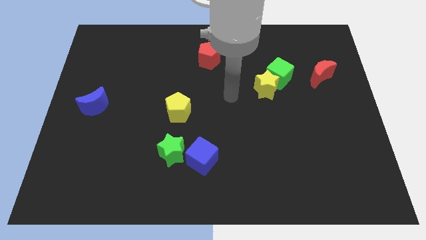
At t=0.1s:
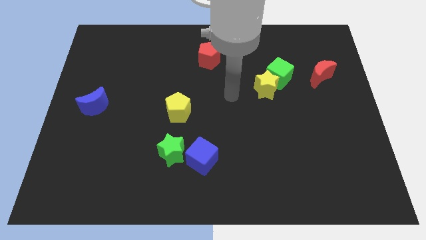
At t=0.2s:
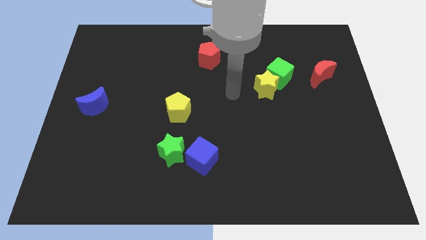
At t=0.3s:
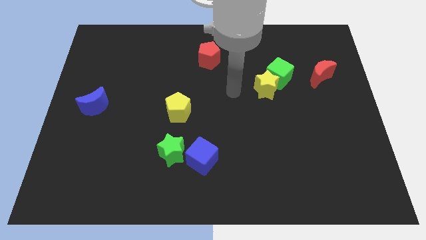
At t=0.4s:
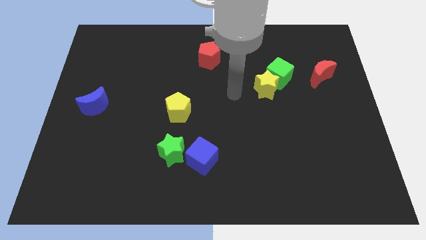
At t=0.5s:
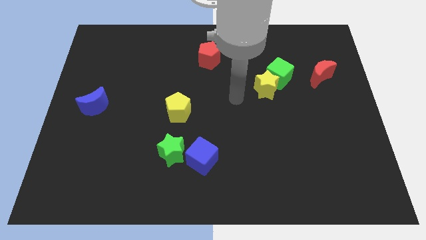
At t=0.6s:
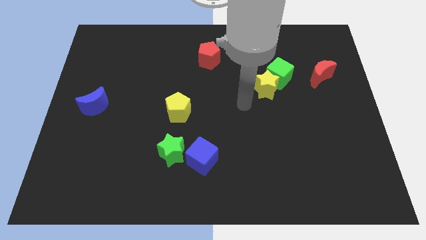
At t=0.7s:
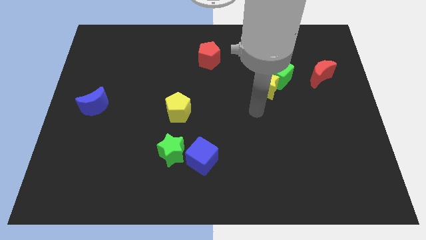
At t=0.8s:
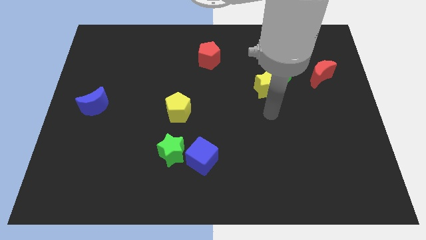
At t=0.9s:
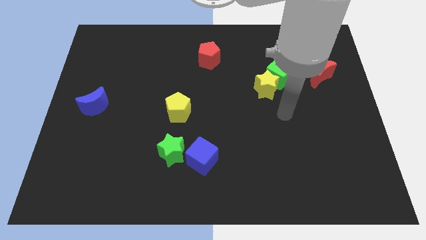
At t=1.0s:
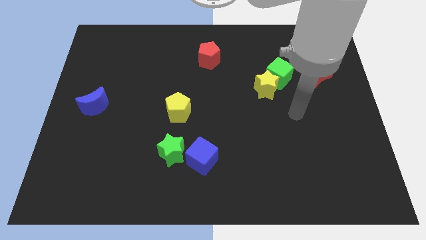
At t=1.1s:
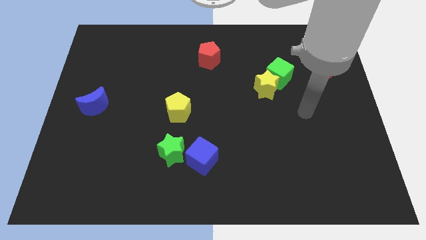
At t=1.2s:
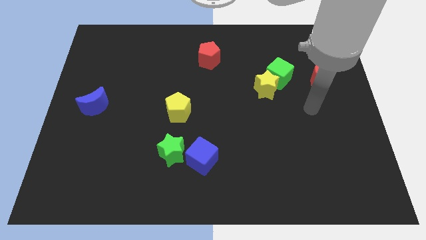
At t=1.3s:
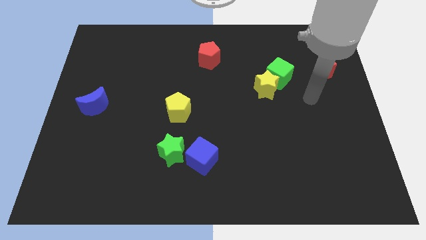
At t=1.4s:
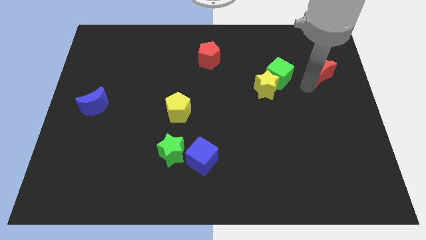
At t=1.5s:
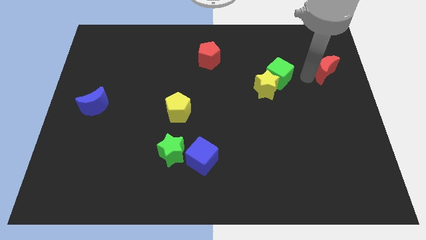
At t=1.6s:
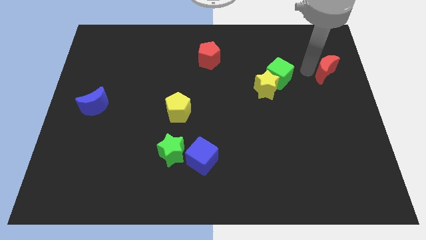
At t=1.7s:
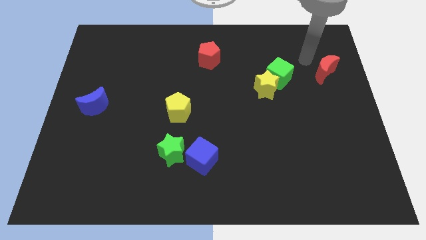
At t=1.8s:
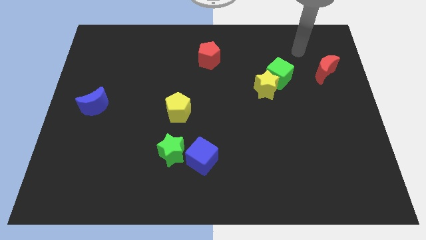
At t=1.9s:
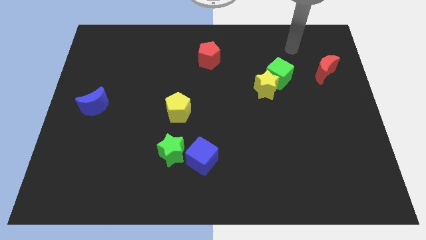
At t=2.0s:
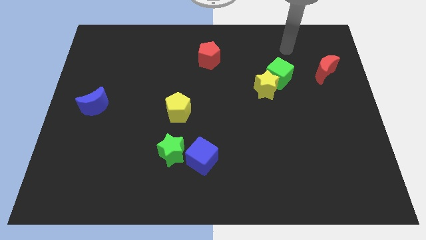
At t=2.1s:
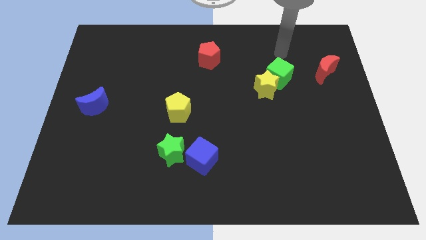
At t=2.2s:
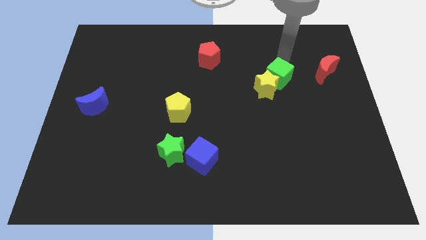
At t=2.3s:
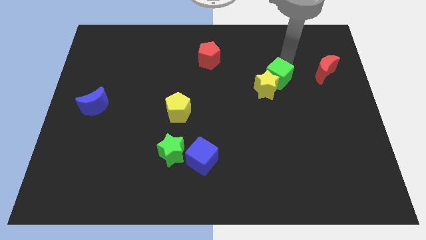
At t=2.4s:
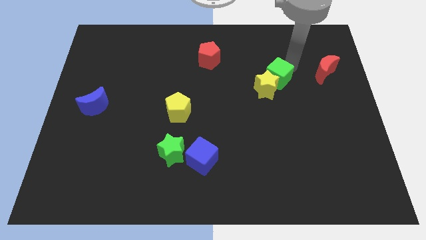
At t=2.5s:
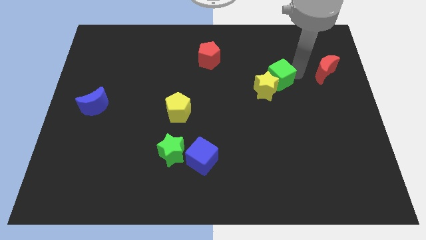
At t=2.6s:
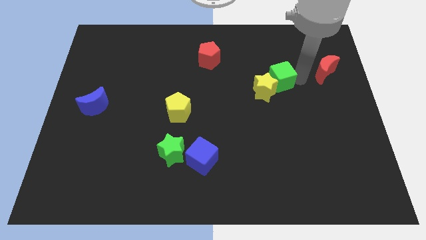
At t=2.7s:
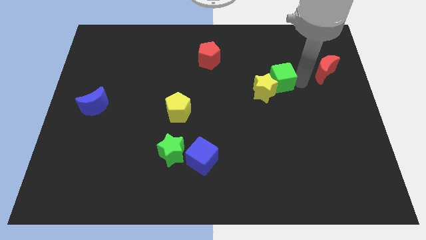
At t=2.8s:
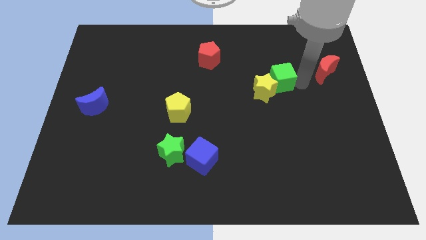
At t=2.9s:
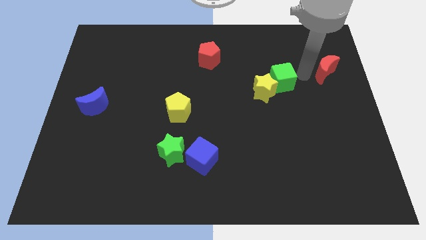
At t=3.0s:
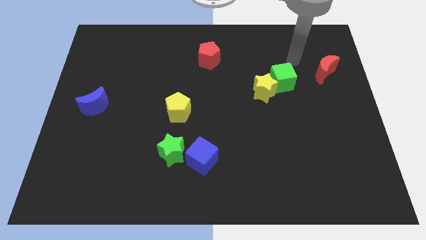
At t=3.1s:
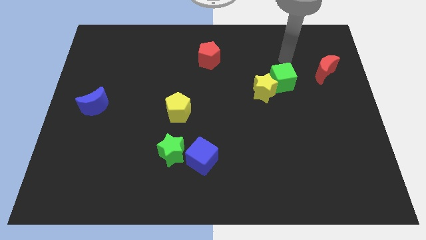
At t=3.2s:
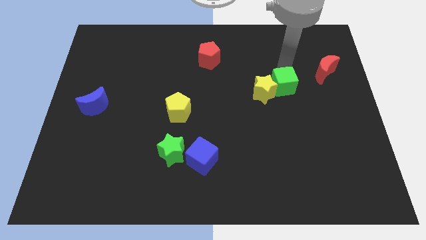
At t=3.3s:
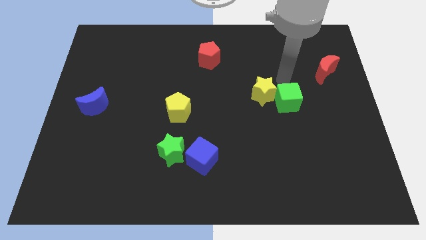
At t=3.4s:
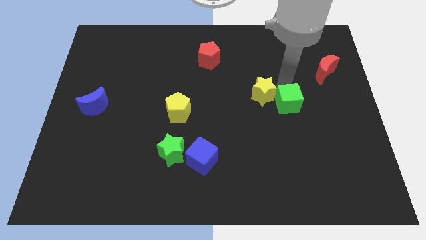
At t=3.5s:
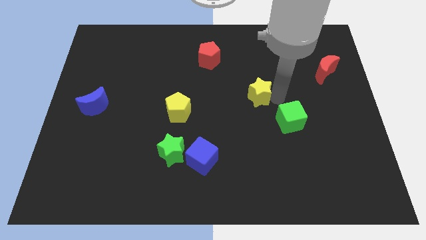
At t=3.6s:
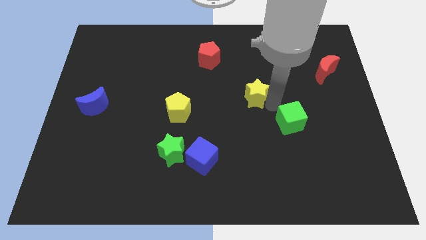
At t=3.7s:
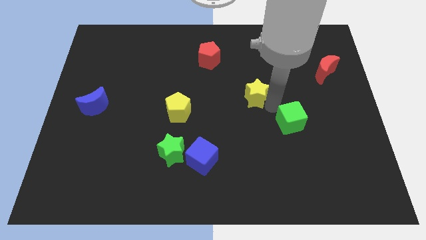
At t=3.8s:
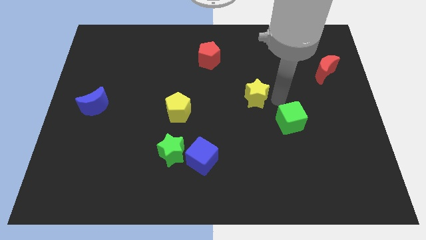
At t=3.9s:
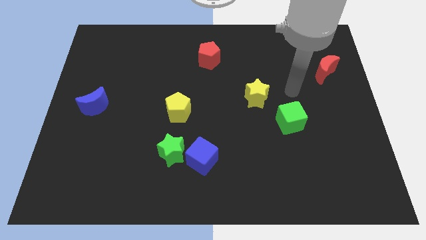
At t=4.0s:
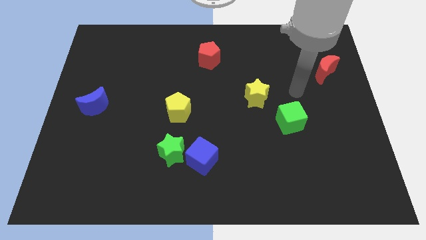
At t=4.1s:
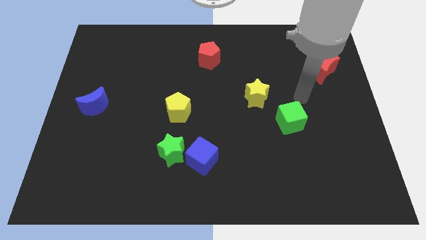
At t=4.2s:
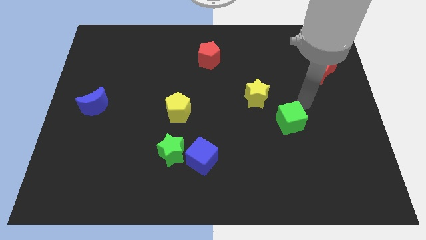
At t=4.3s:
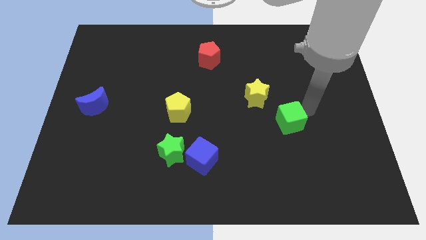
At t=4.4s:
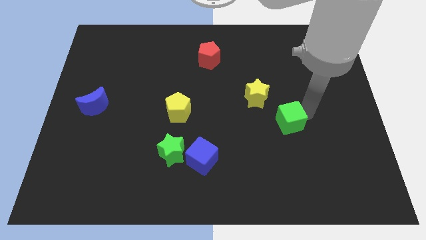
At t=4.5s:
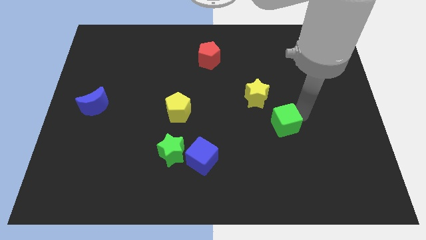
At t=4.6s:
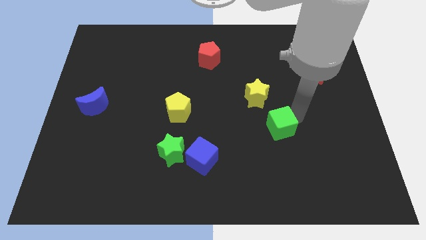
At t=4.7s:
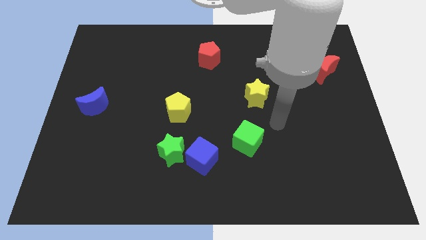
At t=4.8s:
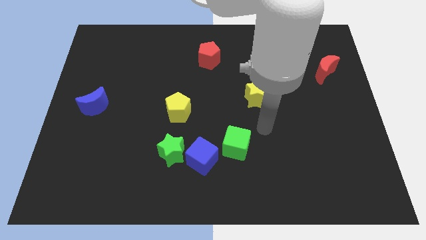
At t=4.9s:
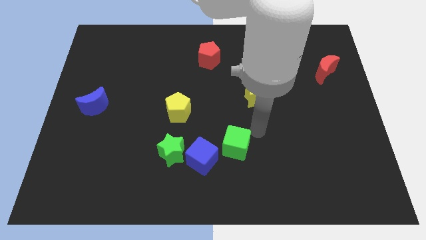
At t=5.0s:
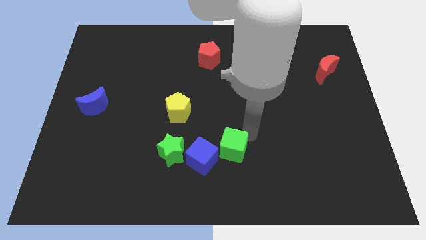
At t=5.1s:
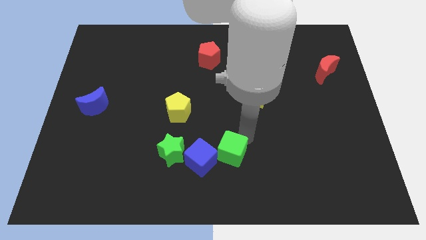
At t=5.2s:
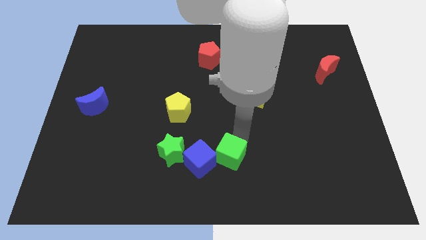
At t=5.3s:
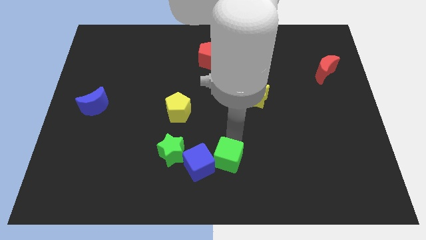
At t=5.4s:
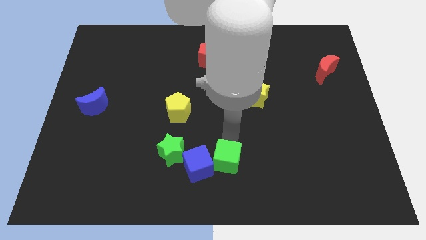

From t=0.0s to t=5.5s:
slide the green cube to the blue cube

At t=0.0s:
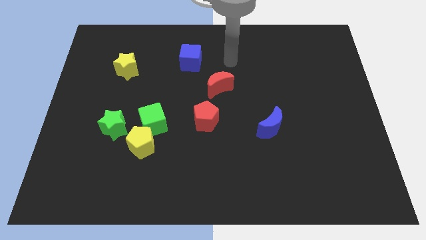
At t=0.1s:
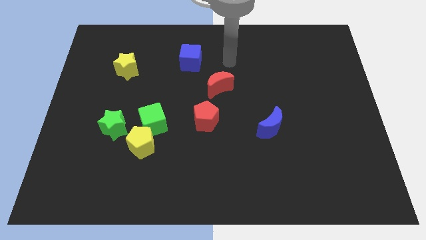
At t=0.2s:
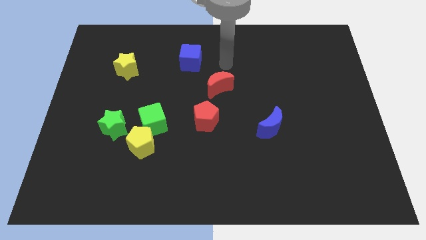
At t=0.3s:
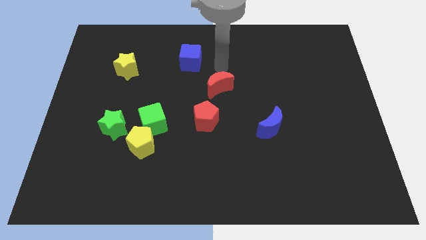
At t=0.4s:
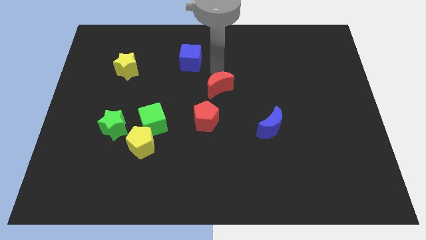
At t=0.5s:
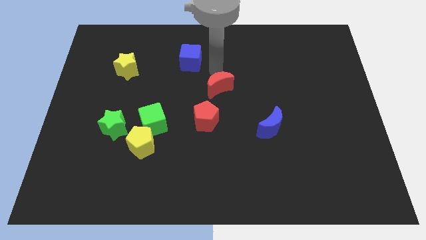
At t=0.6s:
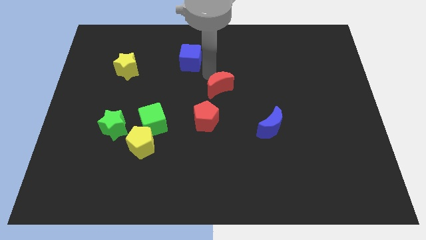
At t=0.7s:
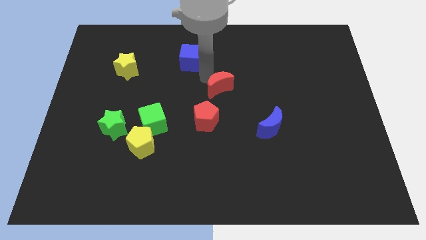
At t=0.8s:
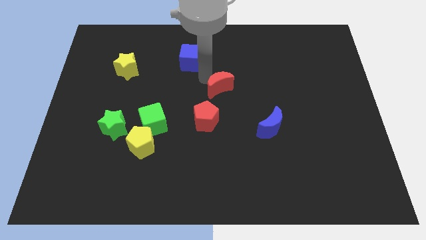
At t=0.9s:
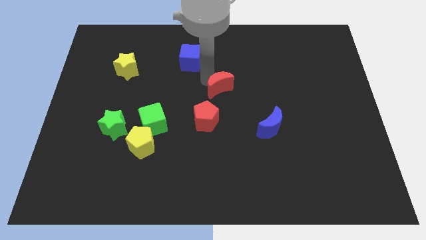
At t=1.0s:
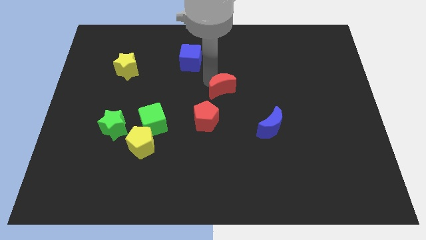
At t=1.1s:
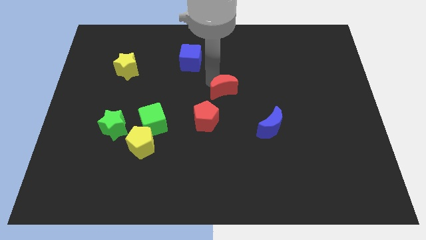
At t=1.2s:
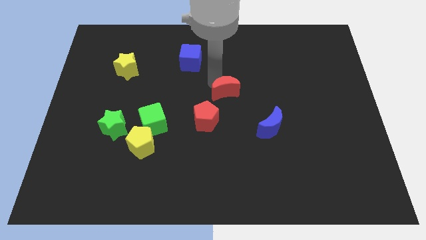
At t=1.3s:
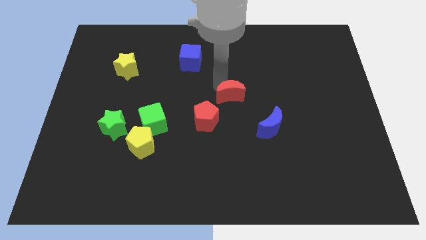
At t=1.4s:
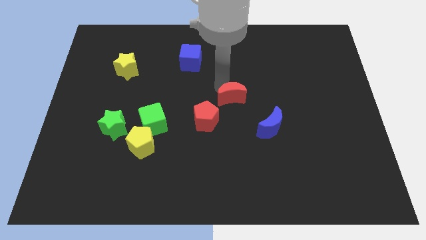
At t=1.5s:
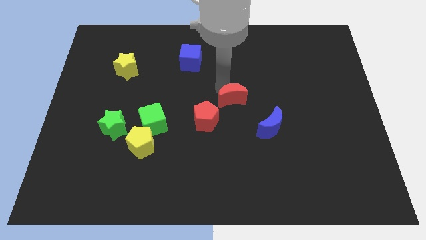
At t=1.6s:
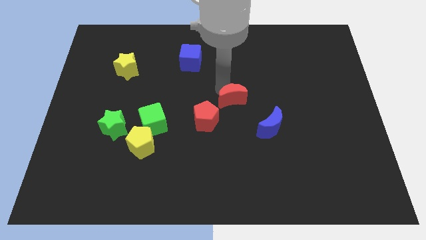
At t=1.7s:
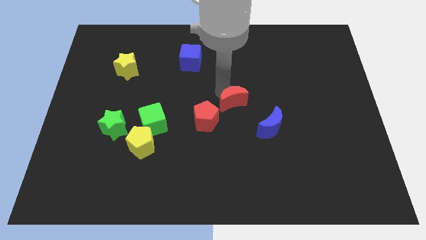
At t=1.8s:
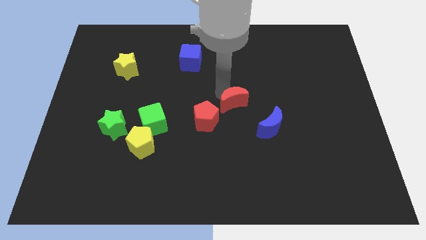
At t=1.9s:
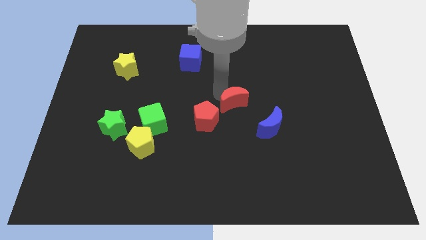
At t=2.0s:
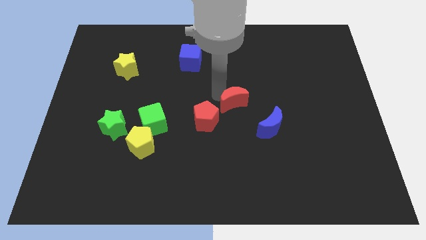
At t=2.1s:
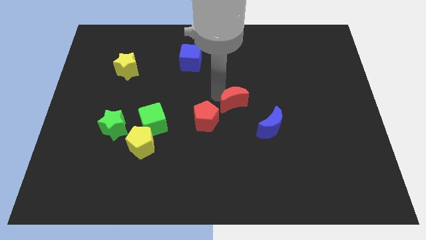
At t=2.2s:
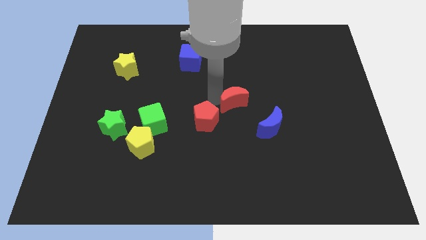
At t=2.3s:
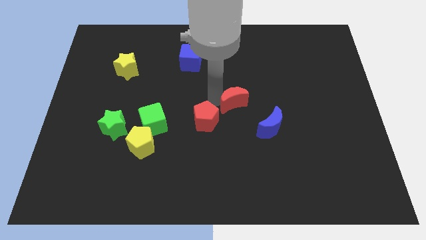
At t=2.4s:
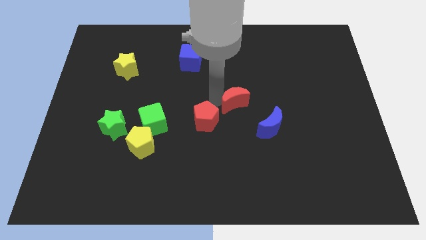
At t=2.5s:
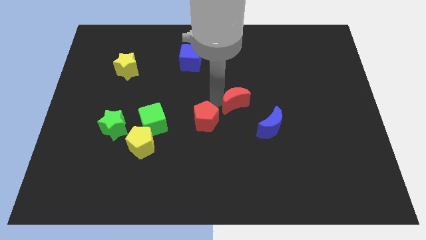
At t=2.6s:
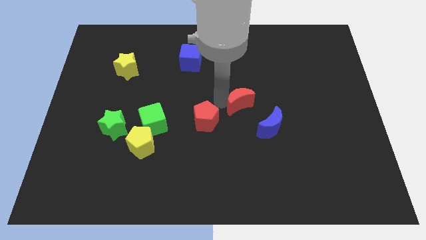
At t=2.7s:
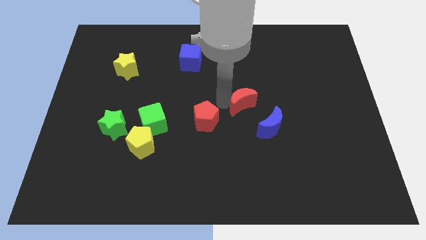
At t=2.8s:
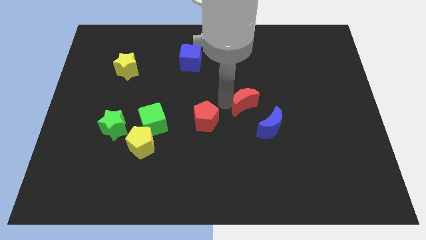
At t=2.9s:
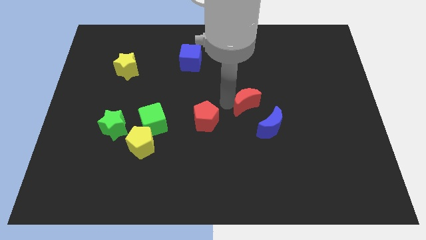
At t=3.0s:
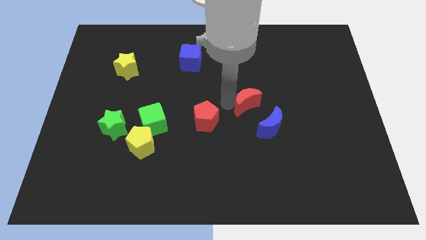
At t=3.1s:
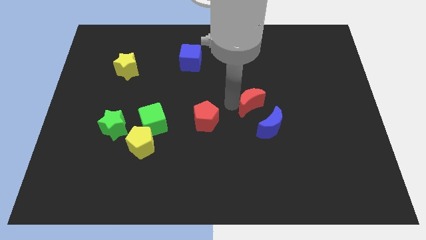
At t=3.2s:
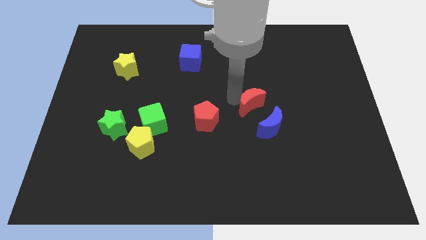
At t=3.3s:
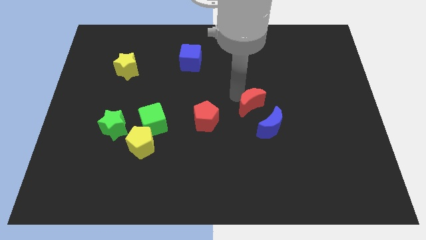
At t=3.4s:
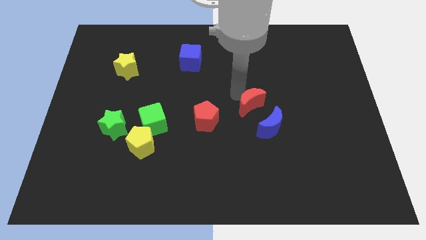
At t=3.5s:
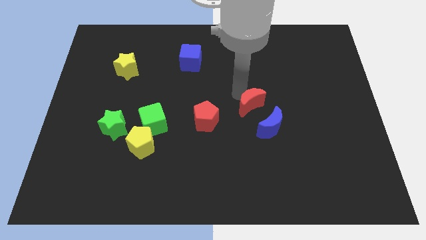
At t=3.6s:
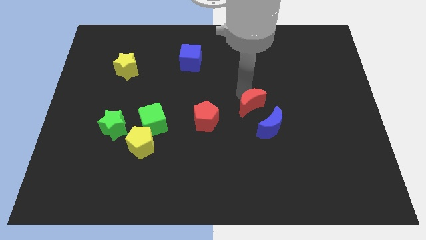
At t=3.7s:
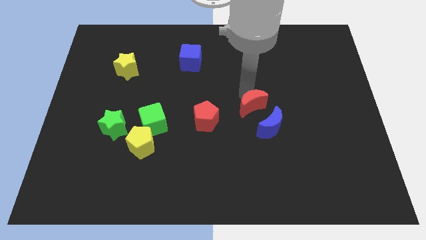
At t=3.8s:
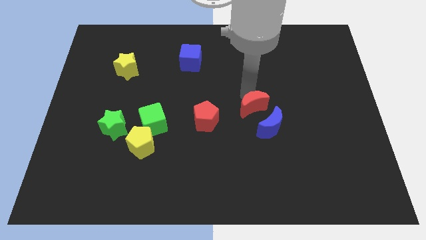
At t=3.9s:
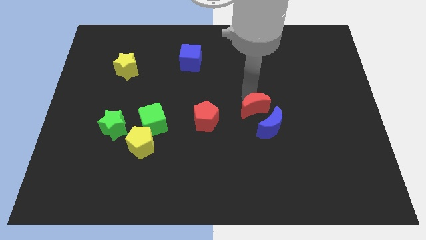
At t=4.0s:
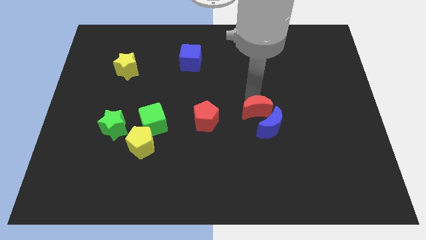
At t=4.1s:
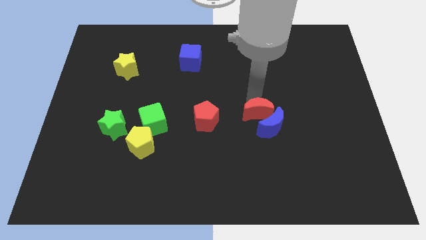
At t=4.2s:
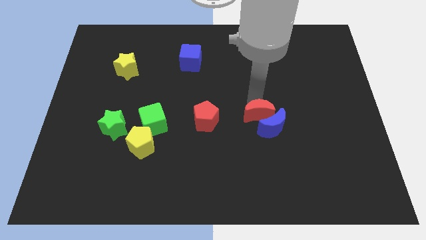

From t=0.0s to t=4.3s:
move the red moon to the blue moon
